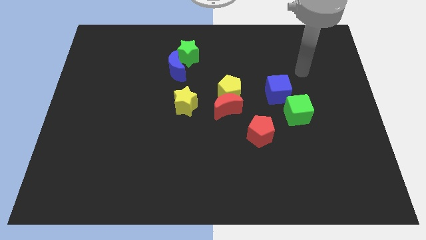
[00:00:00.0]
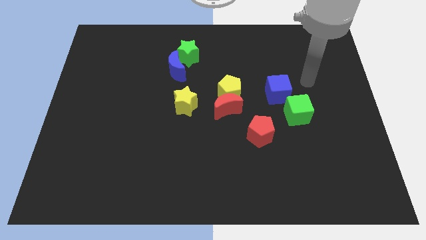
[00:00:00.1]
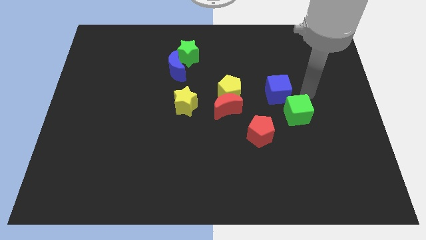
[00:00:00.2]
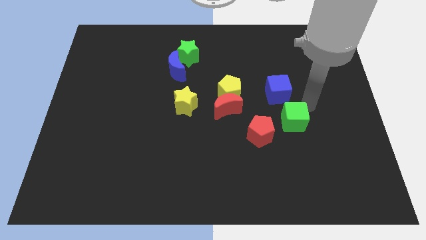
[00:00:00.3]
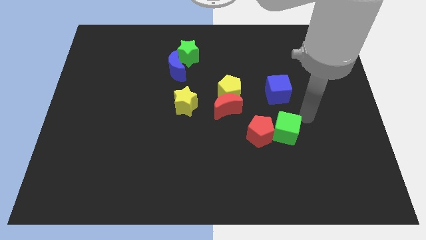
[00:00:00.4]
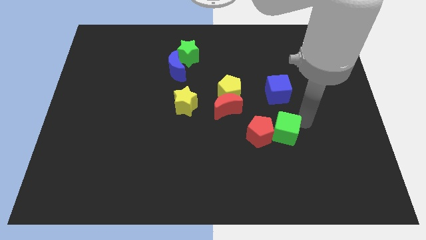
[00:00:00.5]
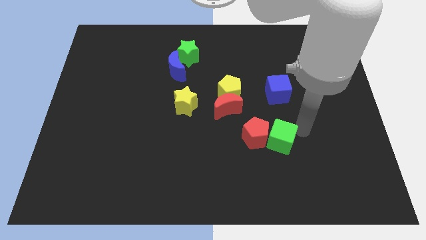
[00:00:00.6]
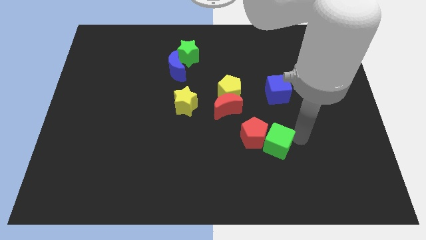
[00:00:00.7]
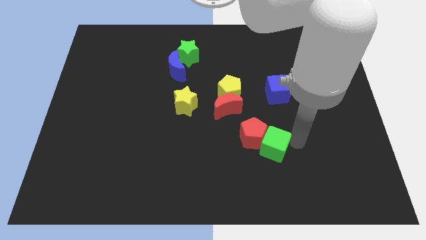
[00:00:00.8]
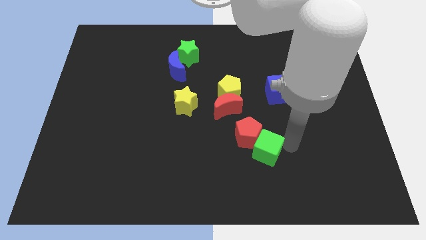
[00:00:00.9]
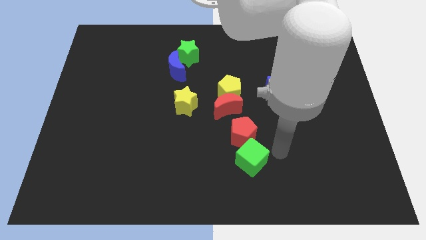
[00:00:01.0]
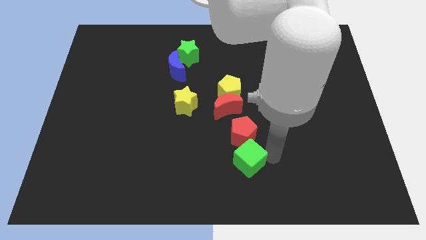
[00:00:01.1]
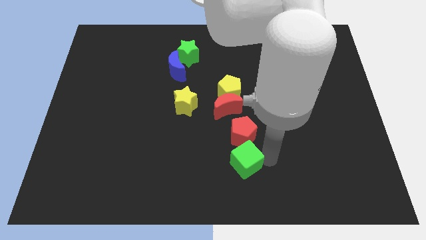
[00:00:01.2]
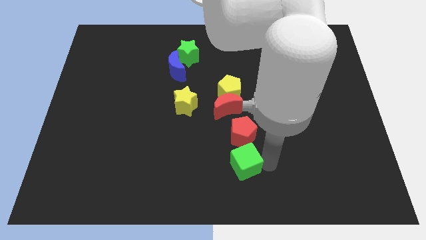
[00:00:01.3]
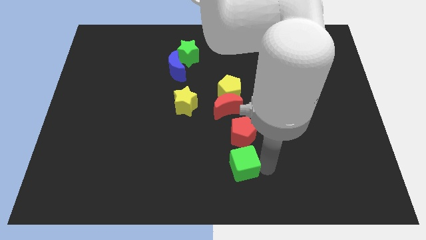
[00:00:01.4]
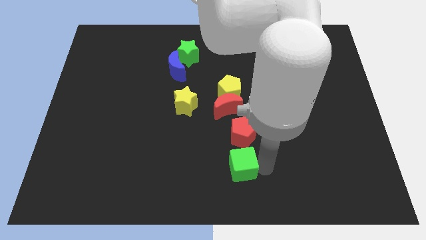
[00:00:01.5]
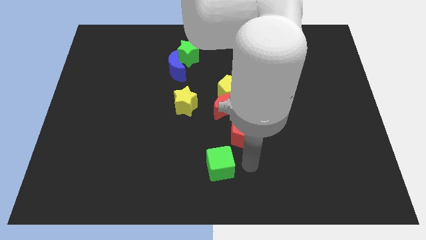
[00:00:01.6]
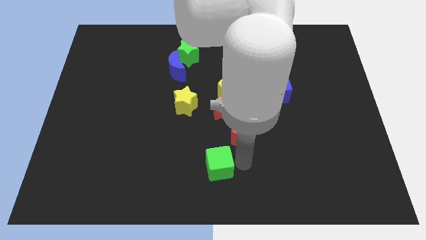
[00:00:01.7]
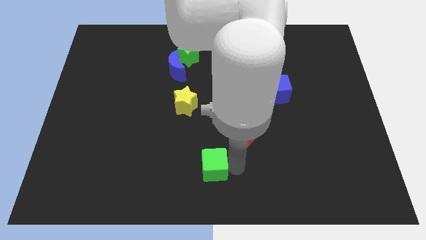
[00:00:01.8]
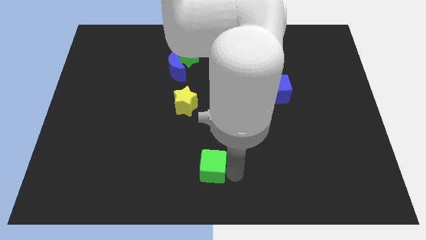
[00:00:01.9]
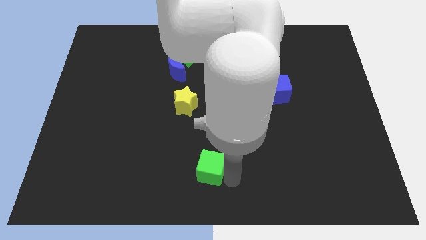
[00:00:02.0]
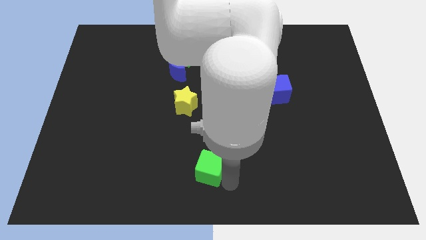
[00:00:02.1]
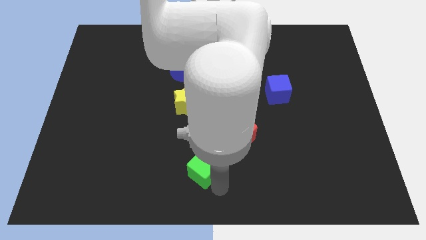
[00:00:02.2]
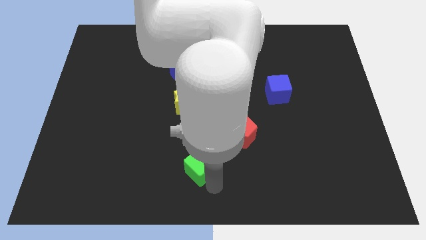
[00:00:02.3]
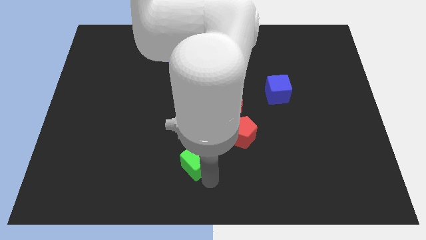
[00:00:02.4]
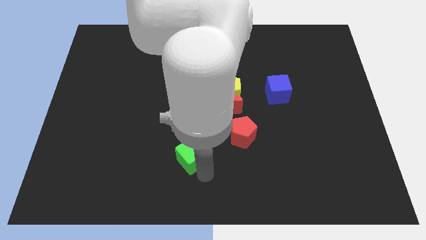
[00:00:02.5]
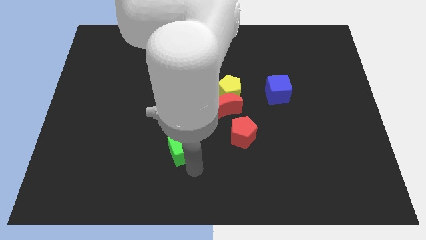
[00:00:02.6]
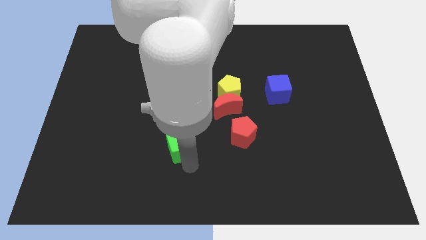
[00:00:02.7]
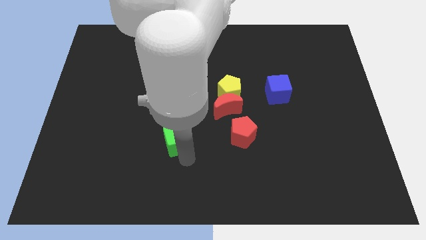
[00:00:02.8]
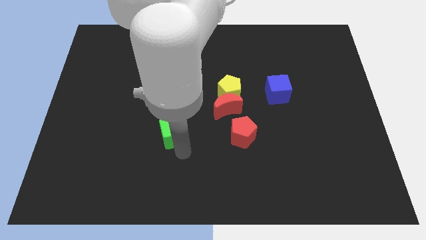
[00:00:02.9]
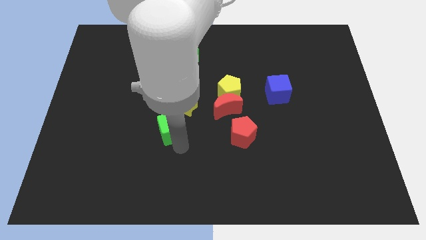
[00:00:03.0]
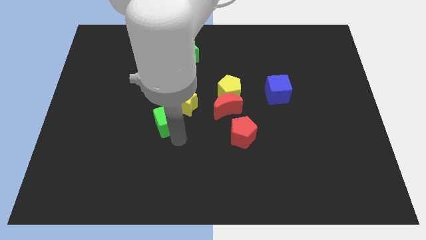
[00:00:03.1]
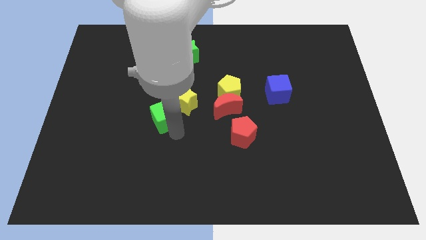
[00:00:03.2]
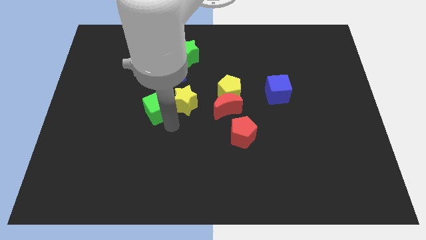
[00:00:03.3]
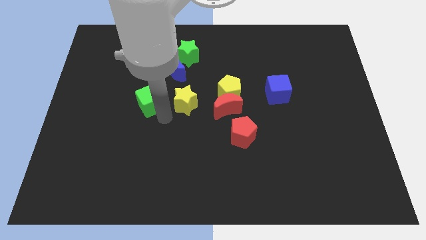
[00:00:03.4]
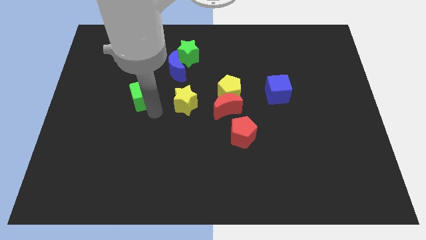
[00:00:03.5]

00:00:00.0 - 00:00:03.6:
push green cube to the center of the board

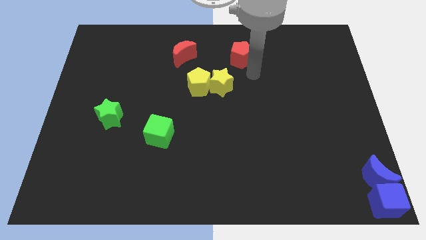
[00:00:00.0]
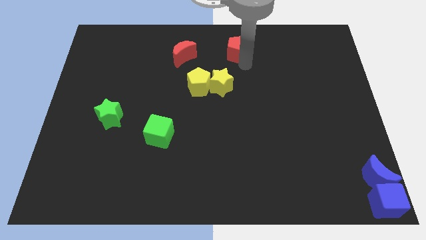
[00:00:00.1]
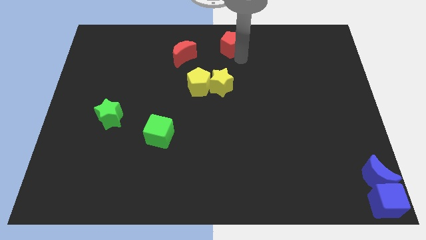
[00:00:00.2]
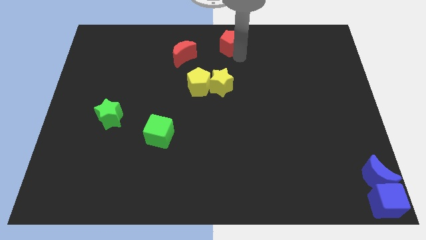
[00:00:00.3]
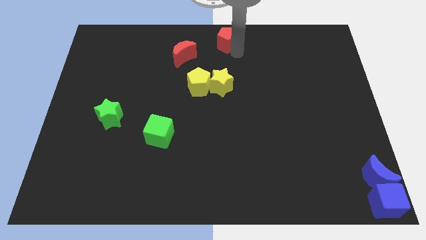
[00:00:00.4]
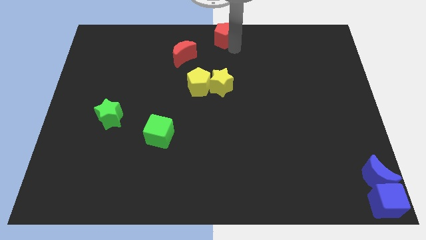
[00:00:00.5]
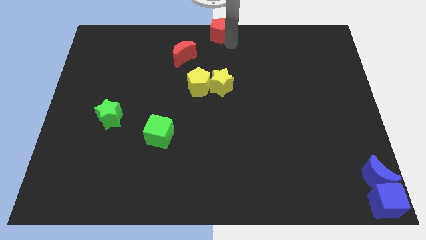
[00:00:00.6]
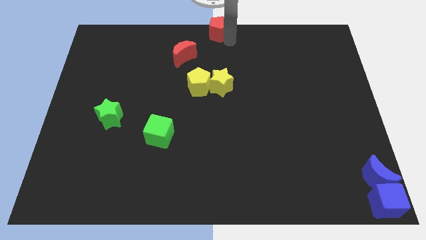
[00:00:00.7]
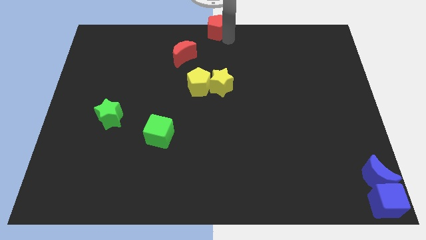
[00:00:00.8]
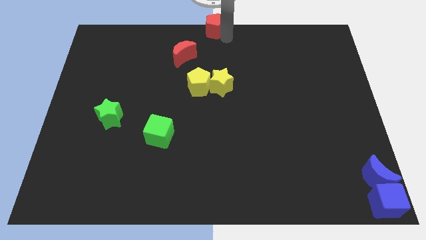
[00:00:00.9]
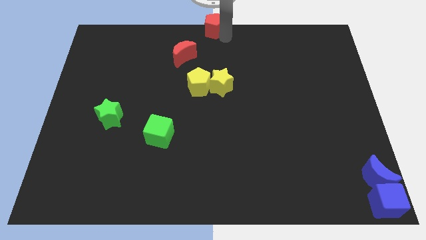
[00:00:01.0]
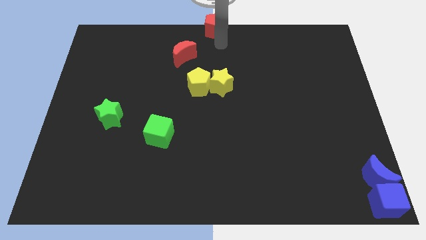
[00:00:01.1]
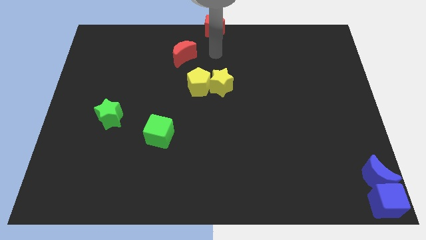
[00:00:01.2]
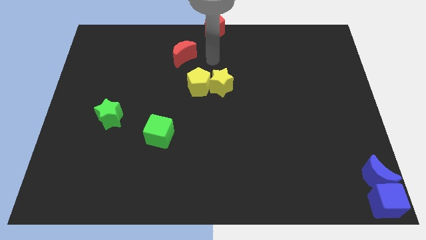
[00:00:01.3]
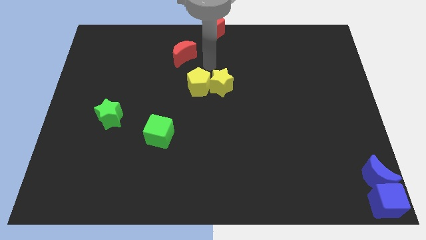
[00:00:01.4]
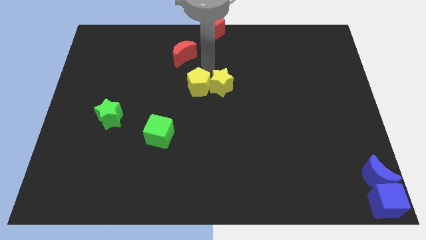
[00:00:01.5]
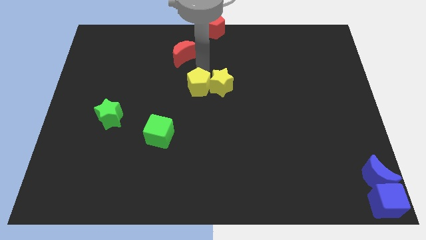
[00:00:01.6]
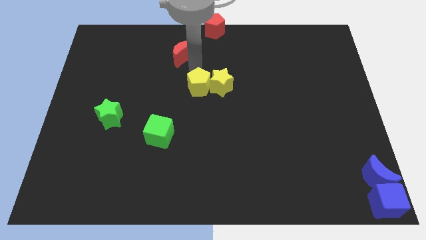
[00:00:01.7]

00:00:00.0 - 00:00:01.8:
move the red pentagon top center of the board

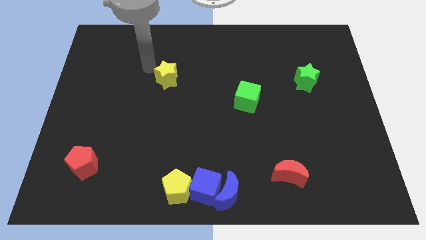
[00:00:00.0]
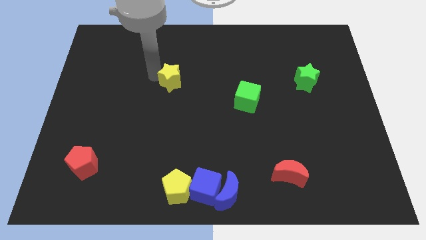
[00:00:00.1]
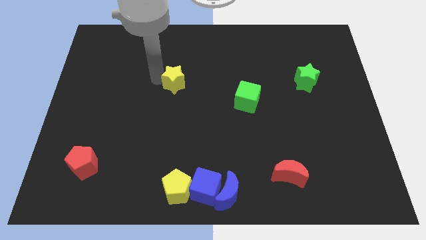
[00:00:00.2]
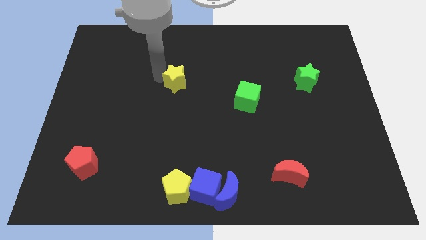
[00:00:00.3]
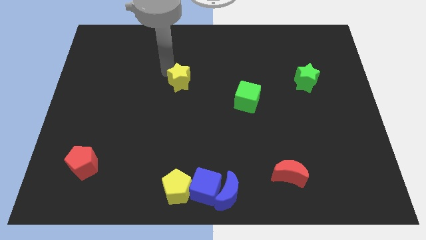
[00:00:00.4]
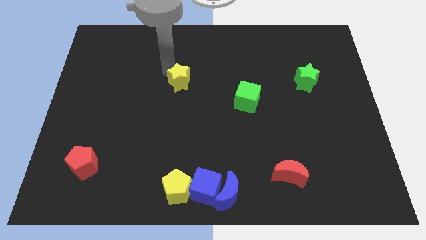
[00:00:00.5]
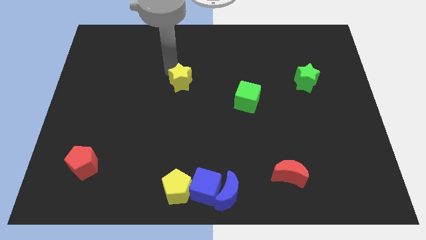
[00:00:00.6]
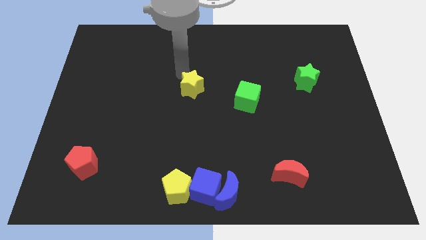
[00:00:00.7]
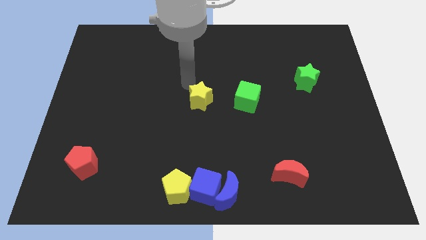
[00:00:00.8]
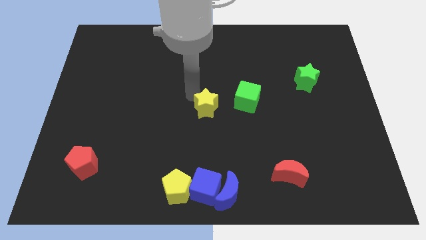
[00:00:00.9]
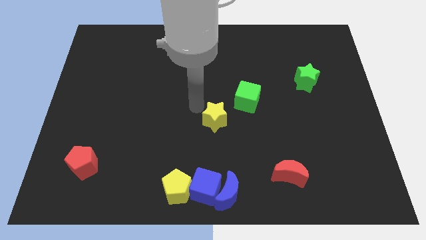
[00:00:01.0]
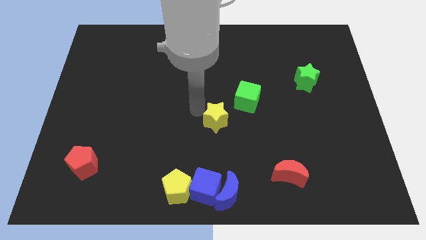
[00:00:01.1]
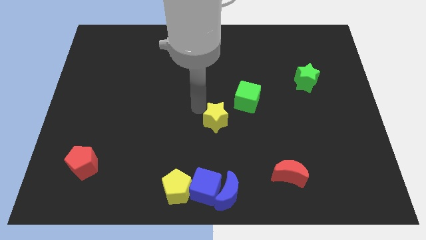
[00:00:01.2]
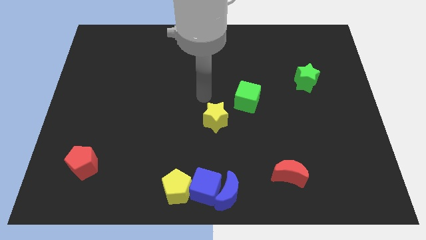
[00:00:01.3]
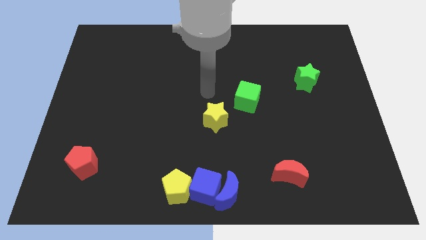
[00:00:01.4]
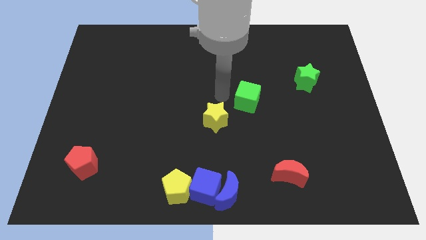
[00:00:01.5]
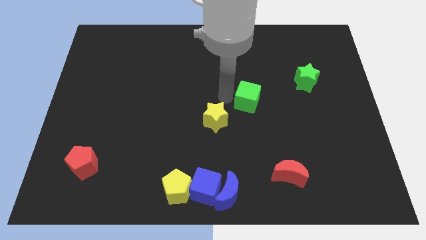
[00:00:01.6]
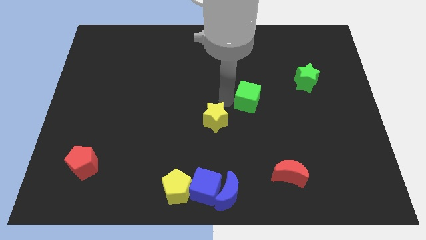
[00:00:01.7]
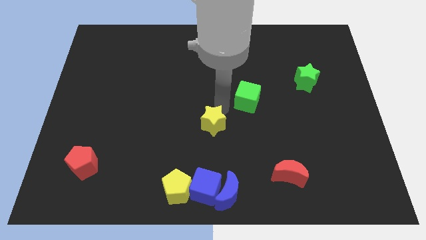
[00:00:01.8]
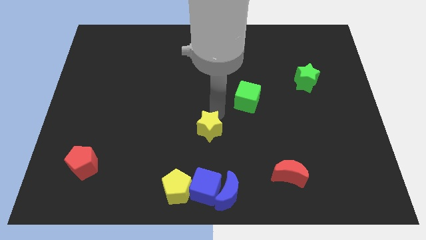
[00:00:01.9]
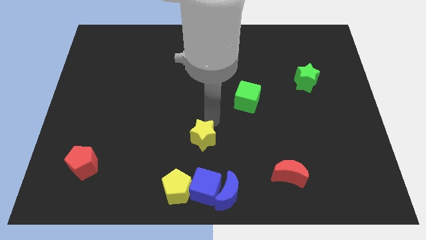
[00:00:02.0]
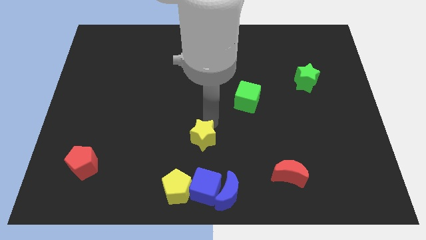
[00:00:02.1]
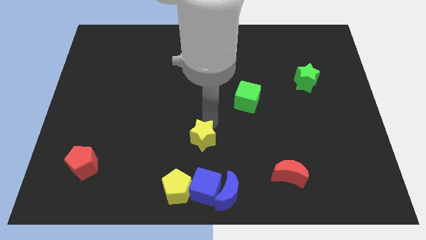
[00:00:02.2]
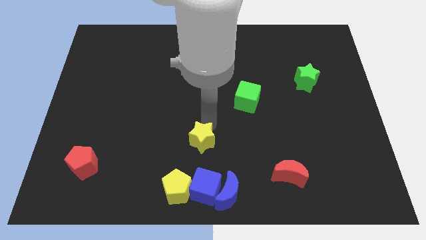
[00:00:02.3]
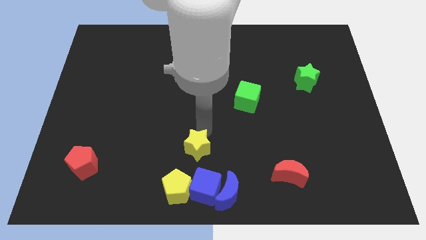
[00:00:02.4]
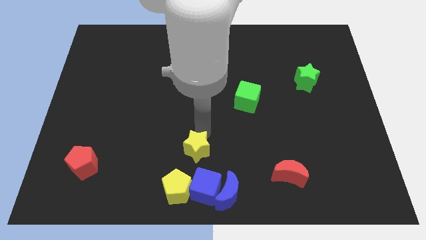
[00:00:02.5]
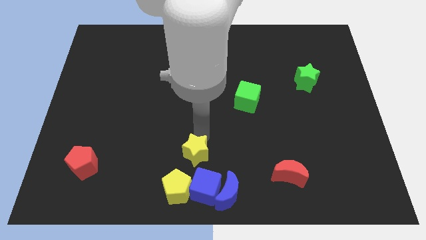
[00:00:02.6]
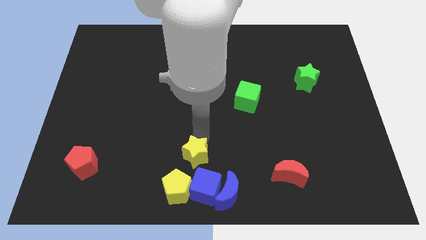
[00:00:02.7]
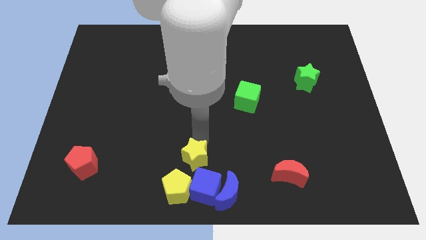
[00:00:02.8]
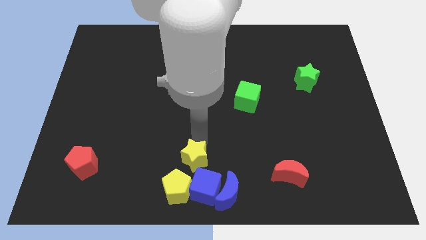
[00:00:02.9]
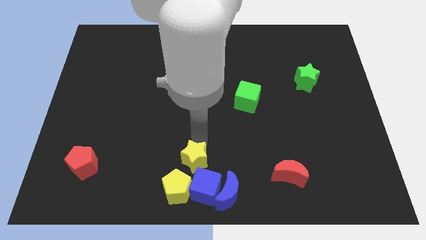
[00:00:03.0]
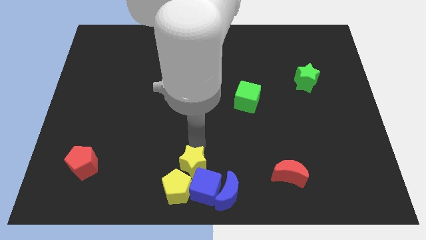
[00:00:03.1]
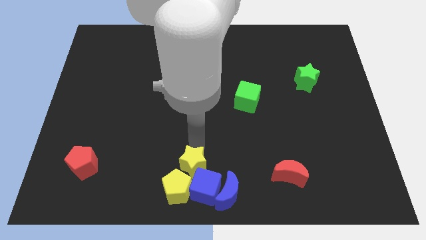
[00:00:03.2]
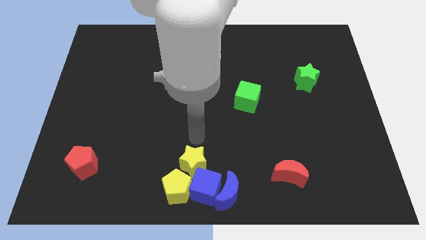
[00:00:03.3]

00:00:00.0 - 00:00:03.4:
push the yellow star towards the top side of the group of blocks

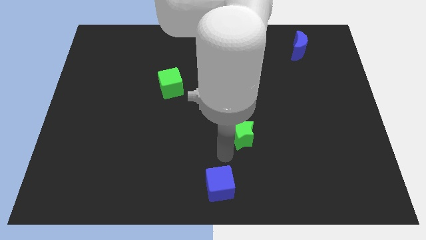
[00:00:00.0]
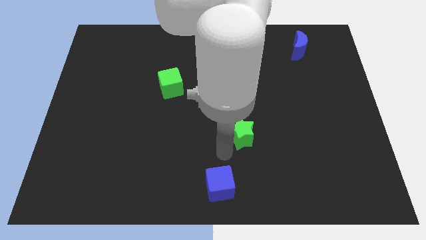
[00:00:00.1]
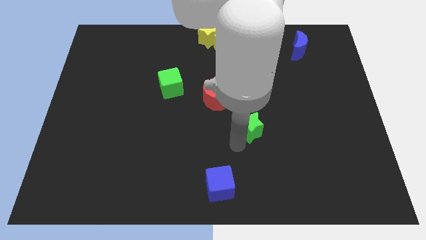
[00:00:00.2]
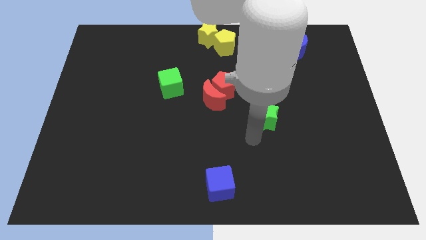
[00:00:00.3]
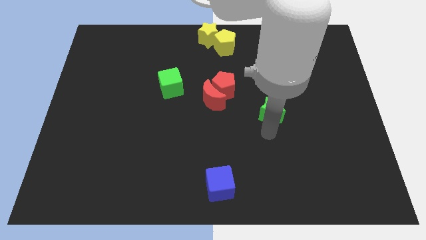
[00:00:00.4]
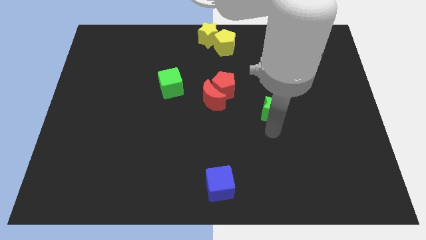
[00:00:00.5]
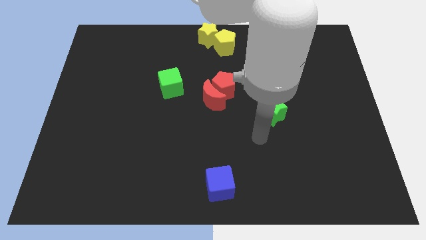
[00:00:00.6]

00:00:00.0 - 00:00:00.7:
move the green star slightly upwards
